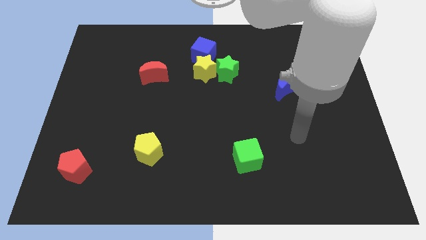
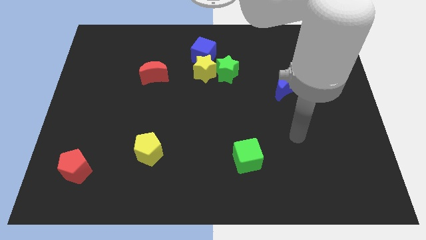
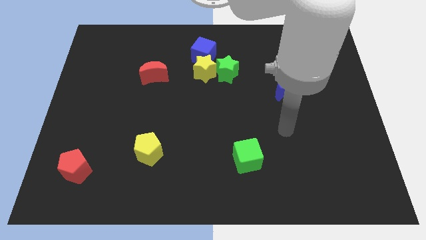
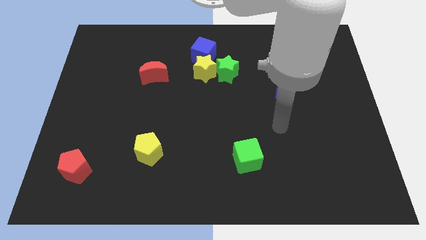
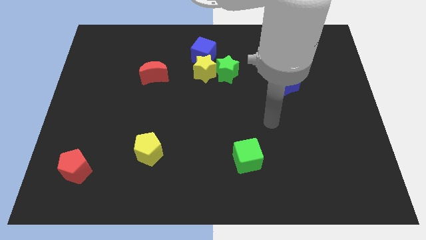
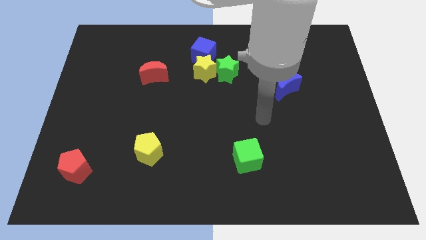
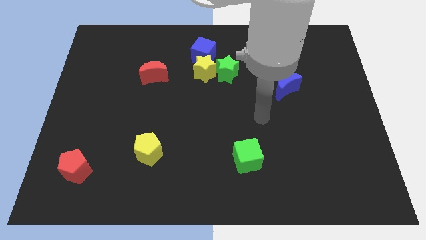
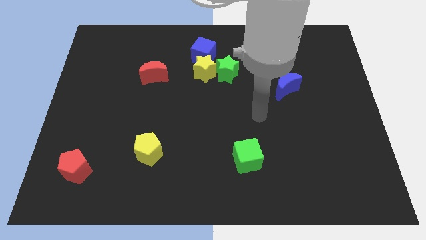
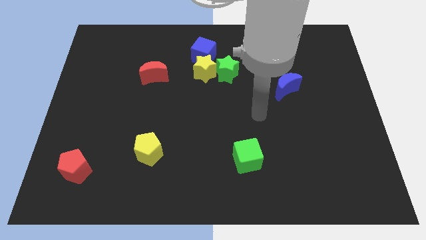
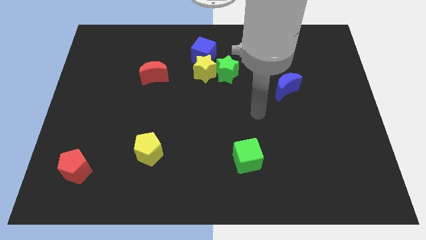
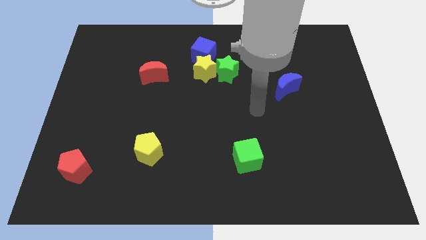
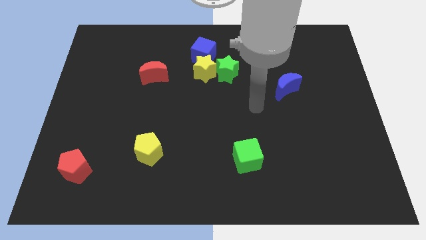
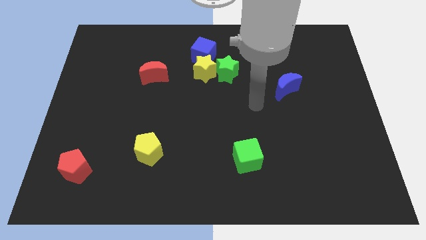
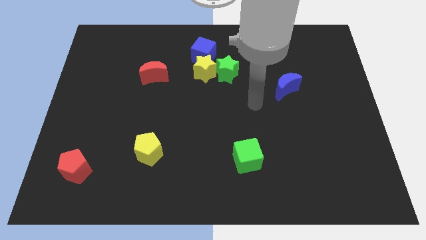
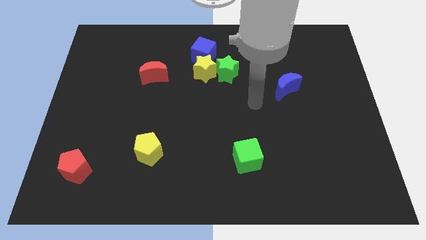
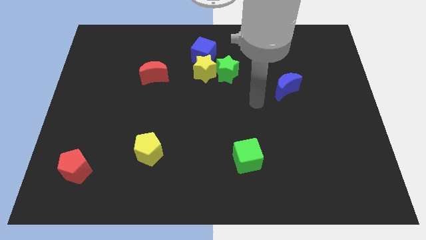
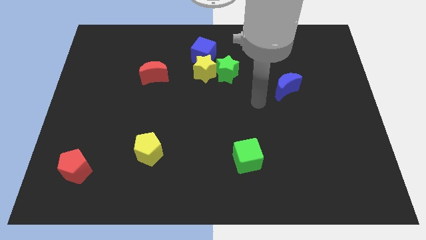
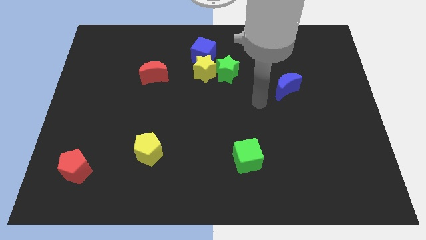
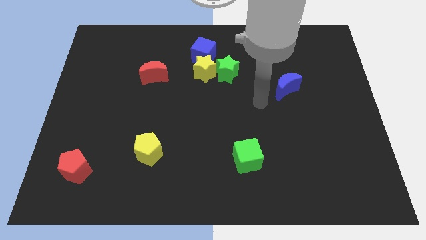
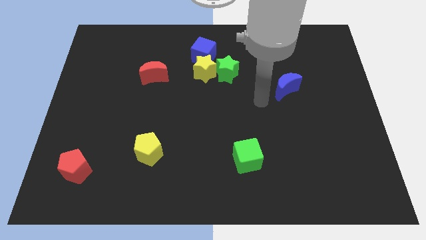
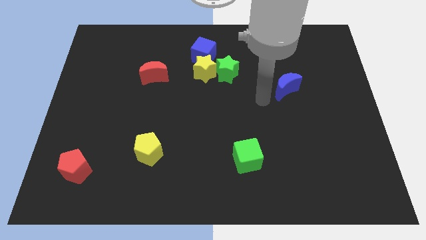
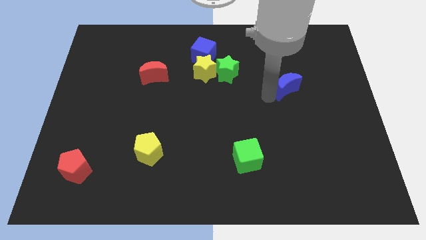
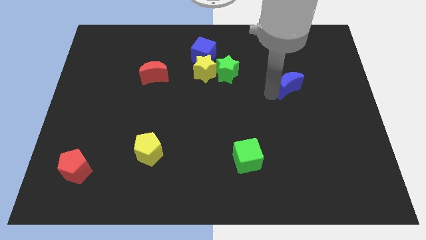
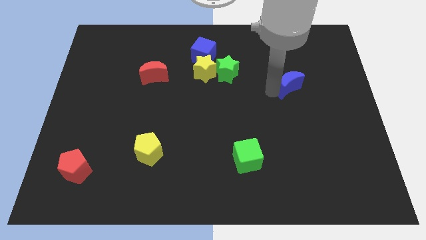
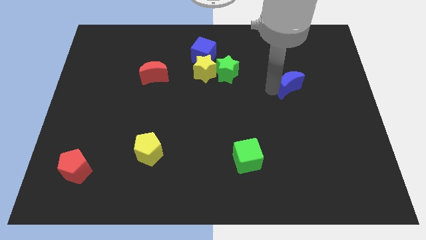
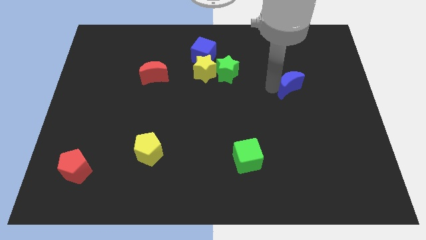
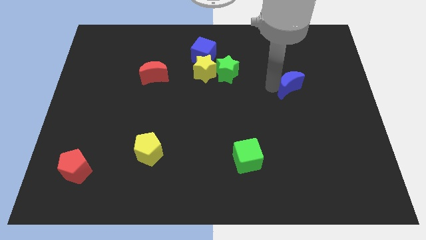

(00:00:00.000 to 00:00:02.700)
place the arm to the left of the blue moon

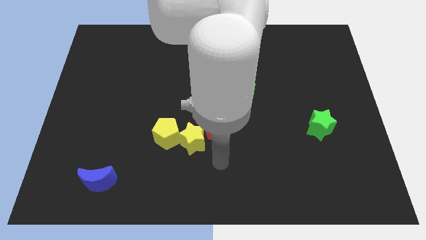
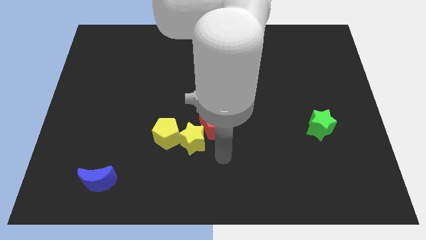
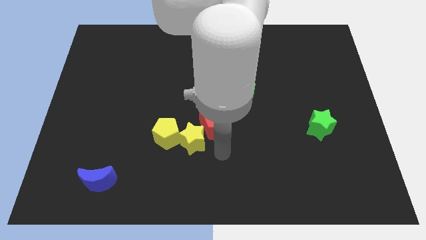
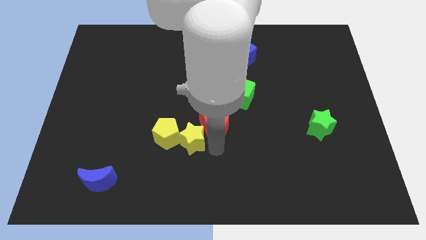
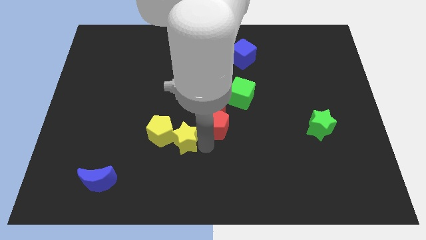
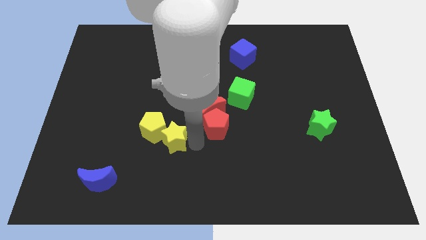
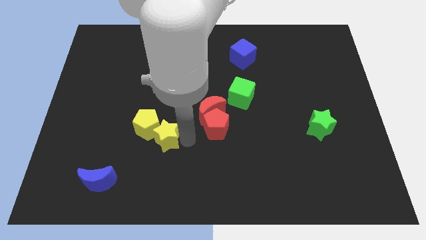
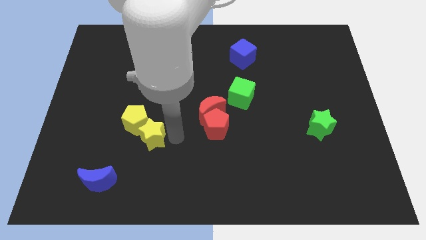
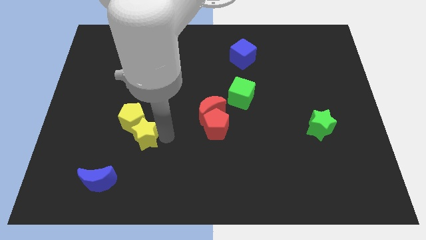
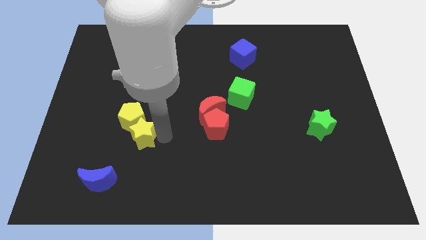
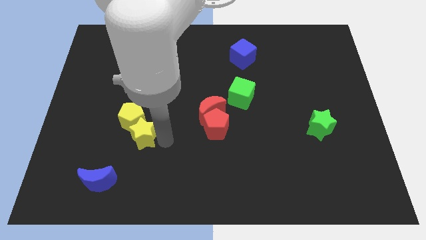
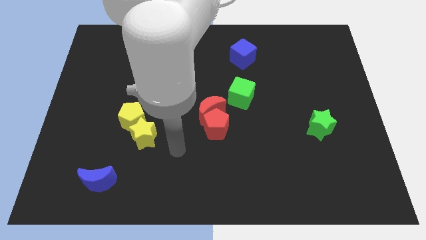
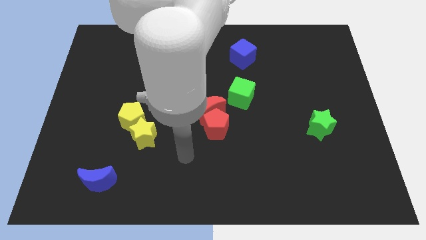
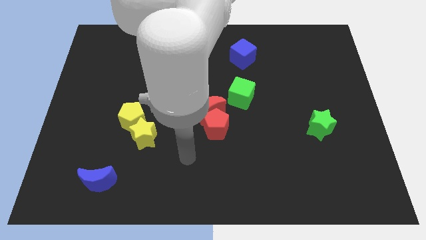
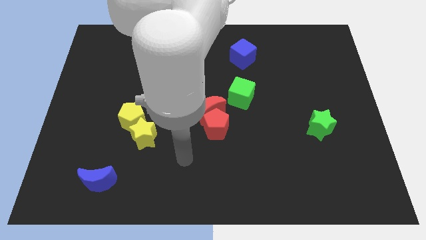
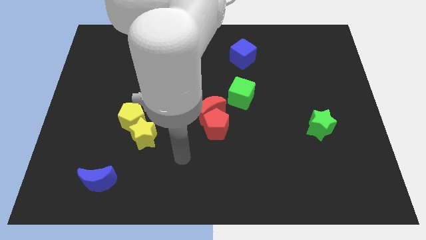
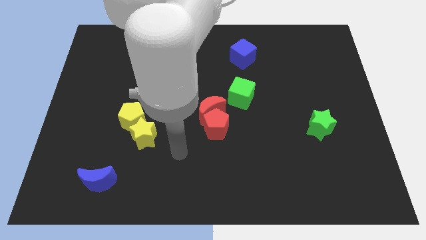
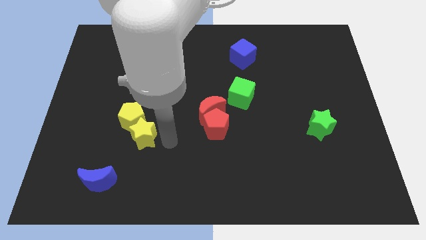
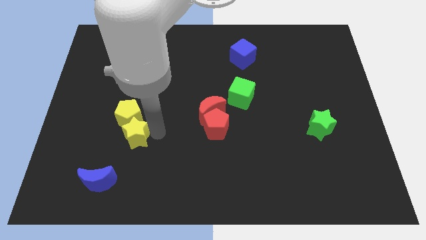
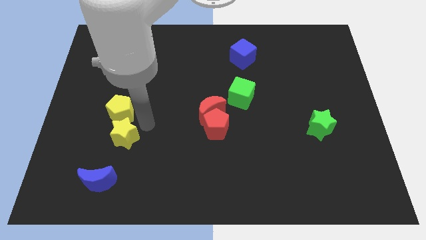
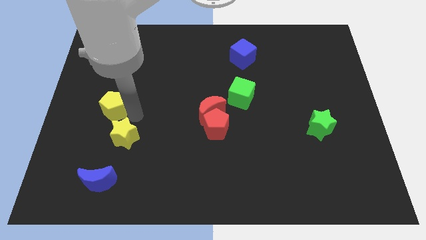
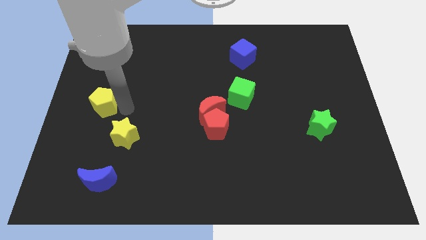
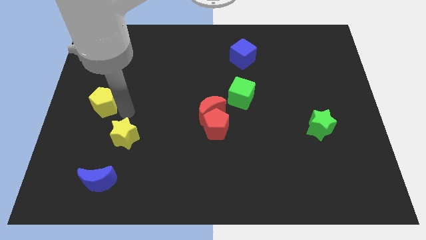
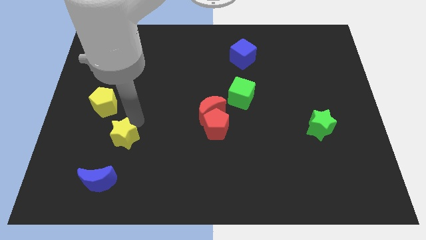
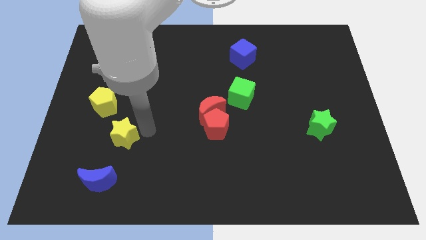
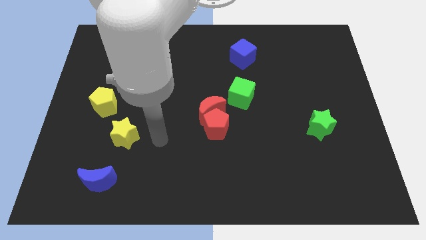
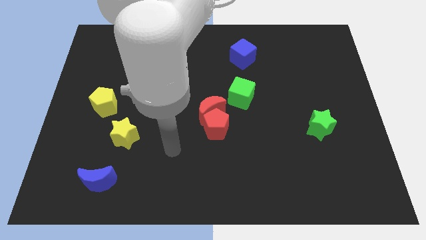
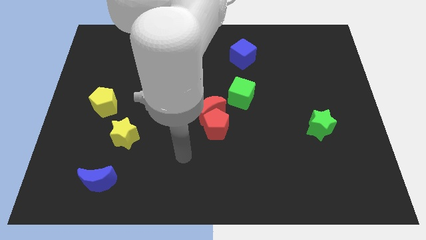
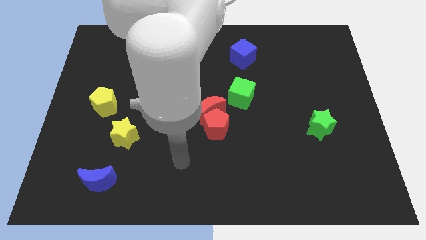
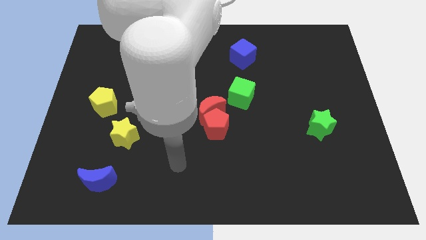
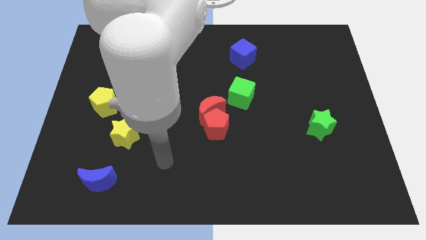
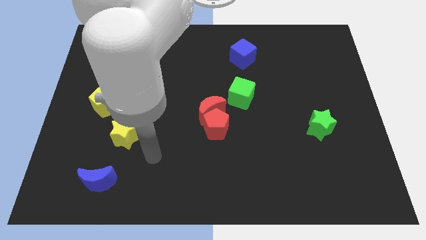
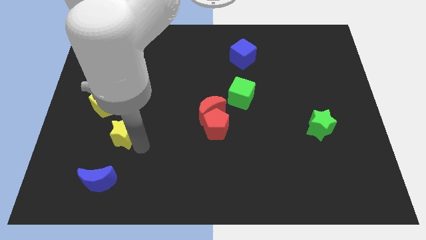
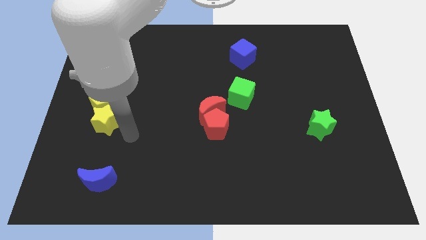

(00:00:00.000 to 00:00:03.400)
move the yellow star and yellow pentagon to the center left

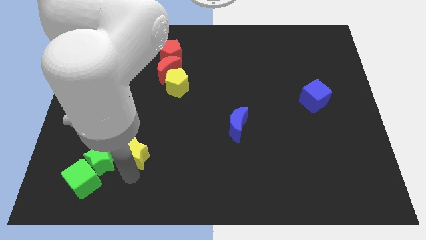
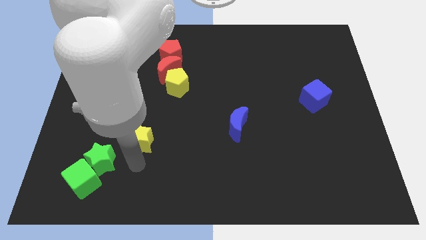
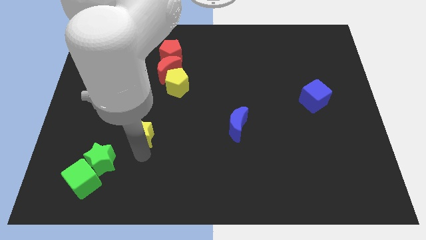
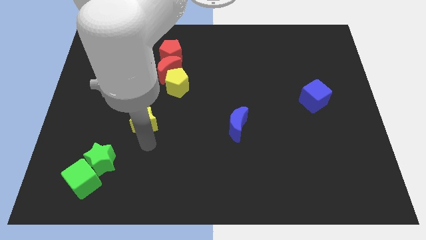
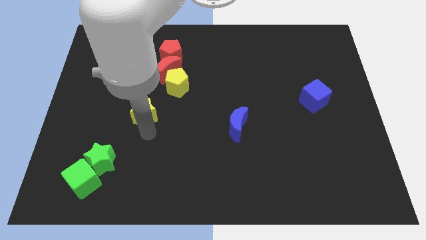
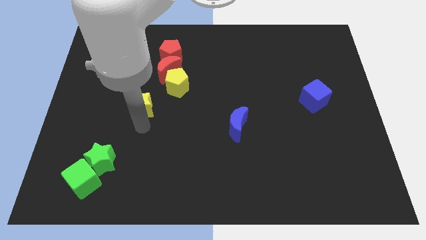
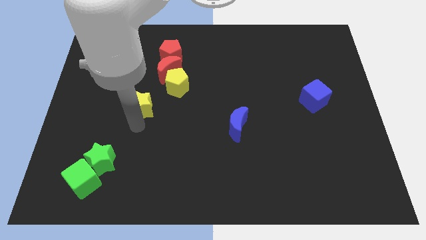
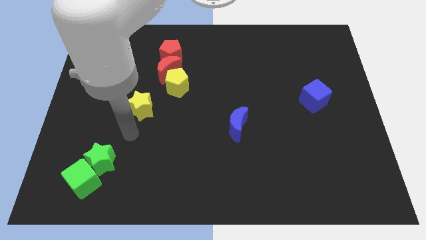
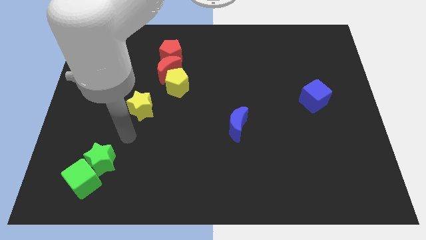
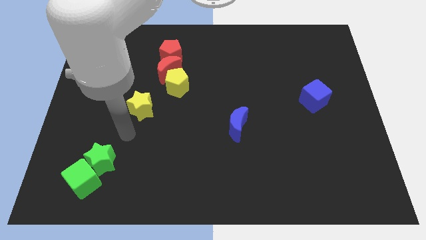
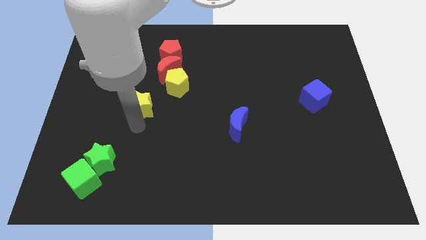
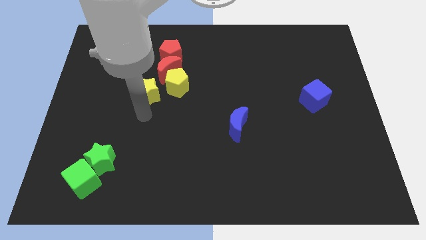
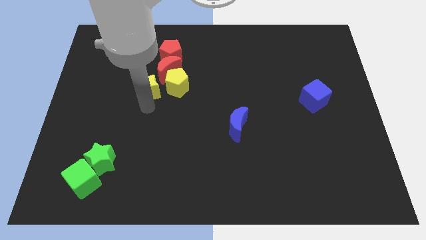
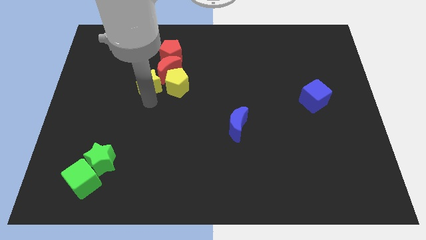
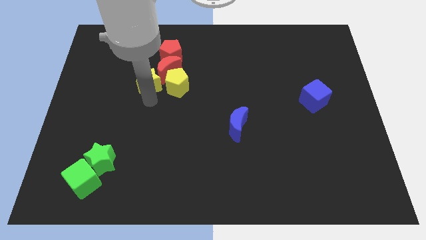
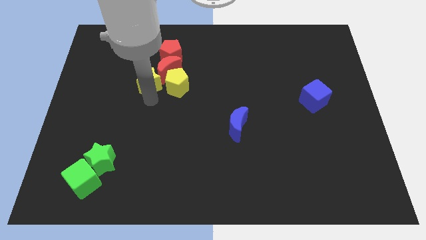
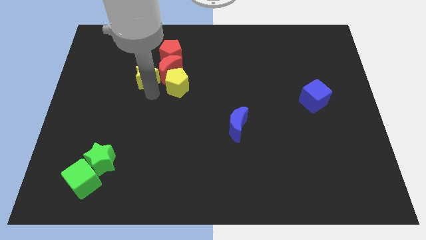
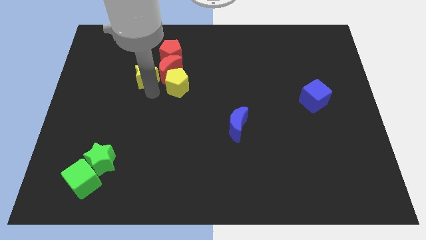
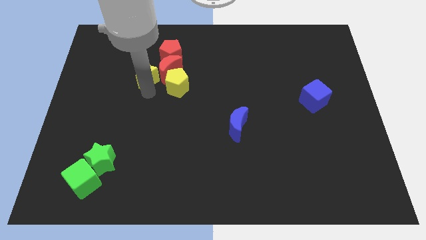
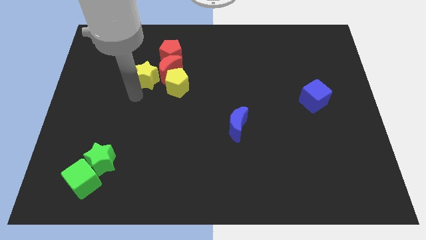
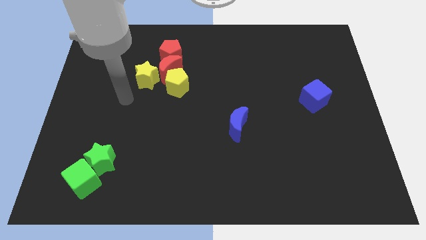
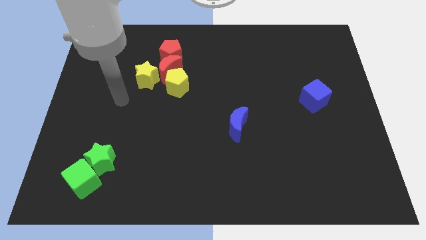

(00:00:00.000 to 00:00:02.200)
move yellow star beside red moon

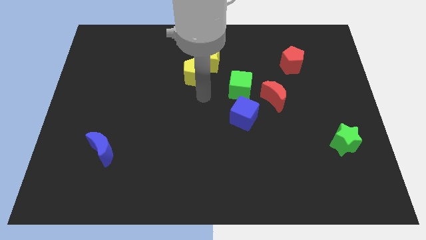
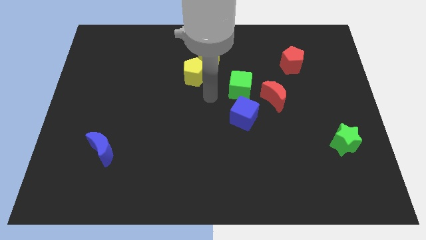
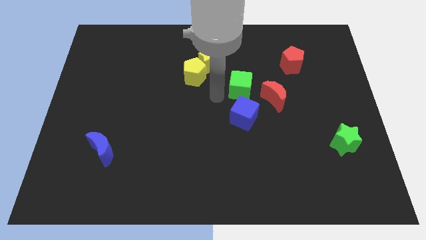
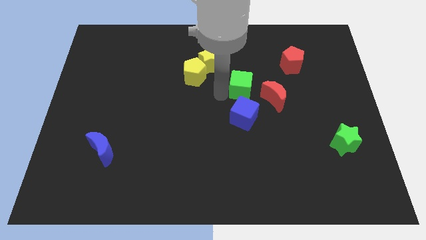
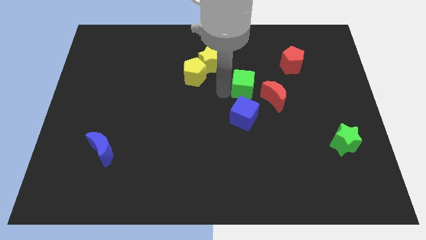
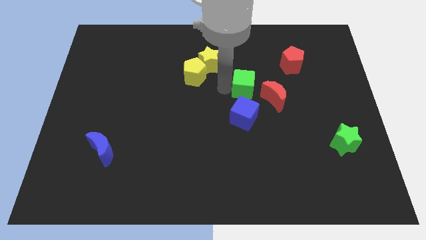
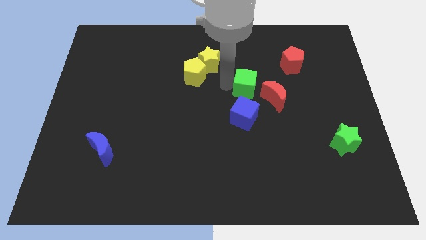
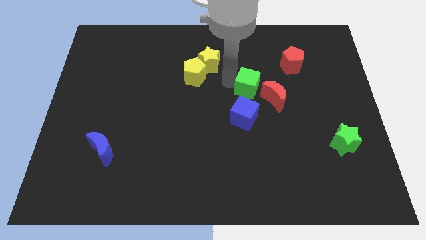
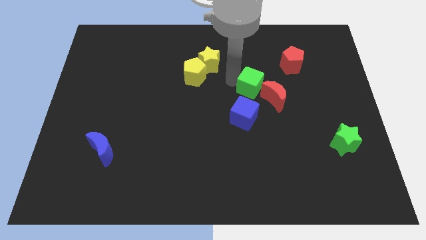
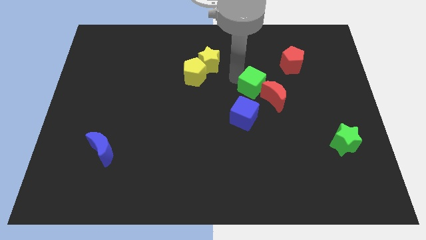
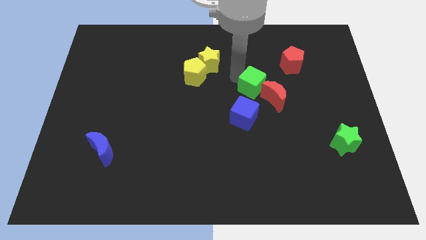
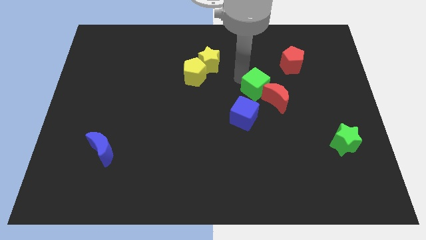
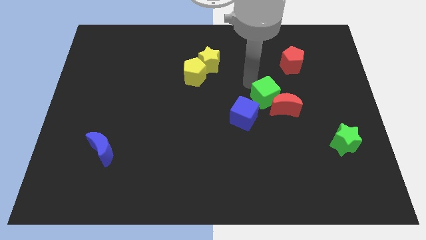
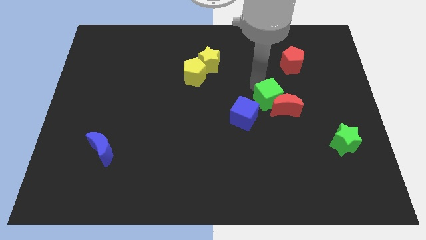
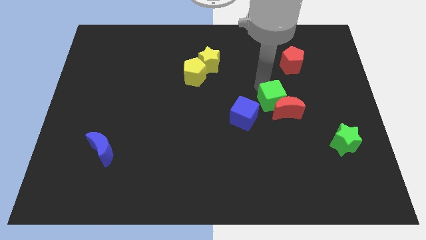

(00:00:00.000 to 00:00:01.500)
push the green cube into the red moon
